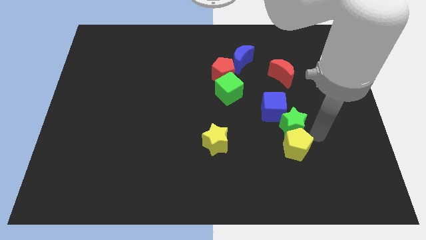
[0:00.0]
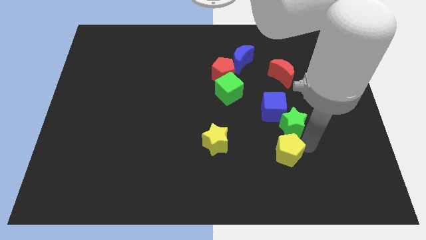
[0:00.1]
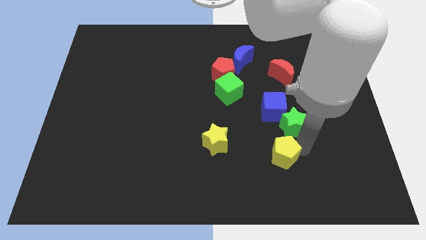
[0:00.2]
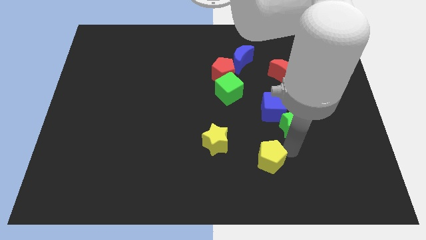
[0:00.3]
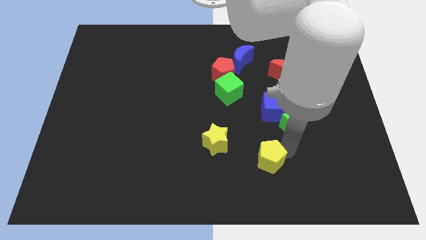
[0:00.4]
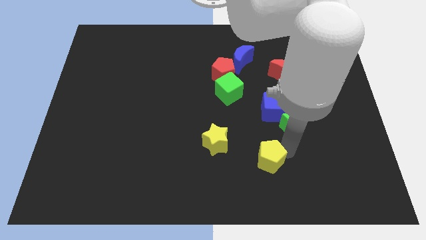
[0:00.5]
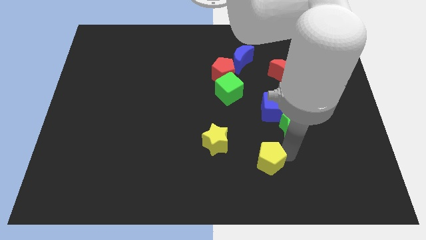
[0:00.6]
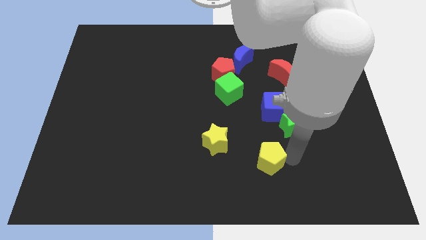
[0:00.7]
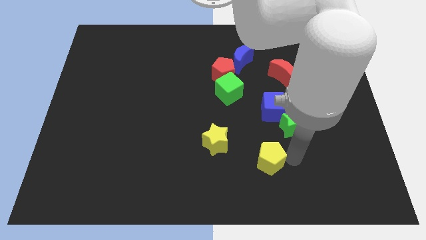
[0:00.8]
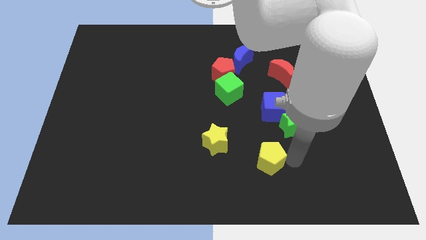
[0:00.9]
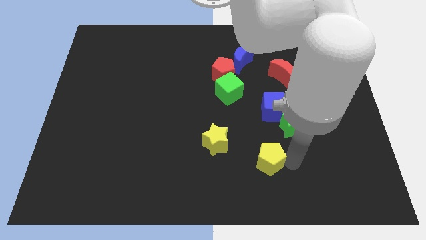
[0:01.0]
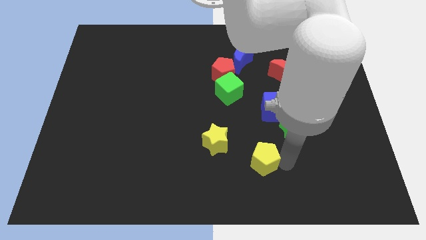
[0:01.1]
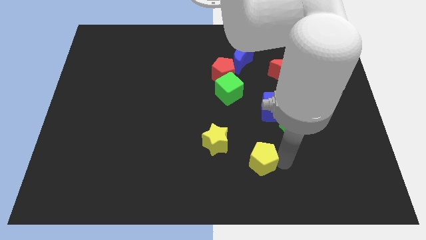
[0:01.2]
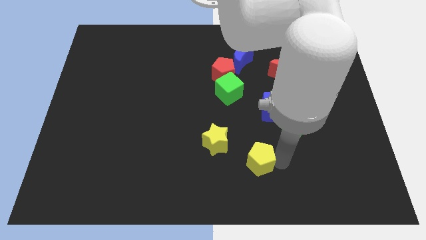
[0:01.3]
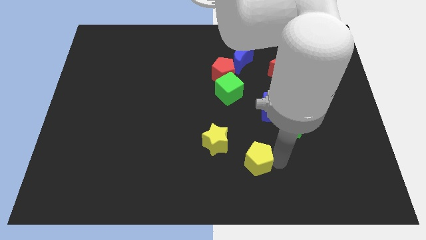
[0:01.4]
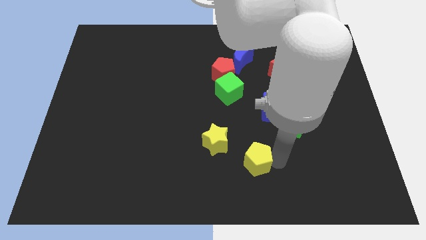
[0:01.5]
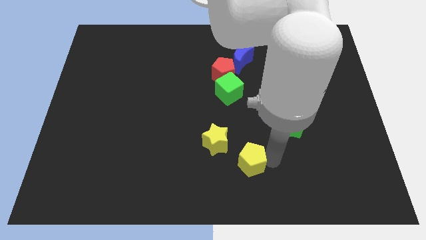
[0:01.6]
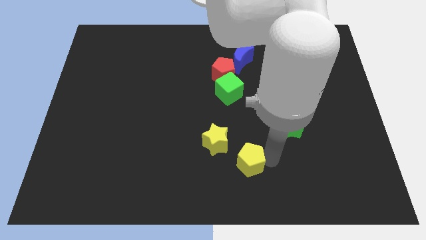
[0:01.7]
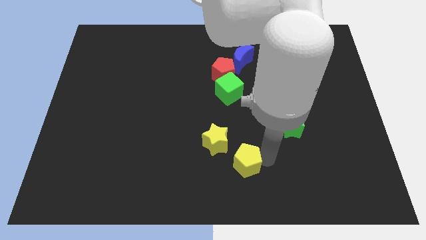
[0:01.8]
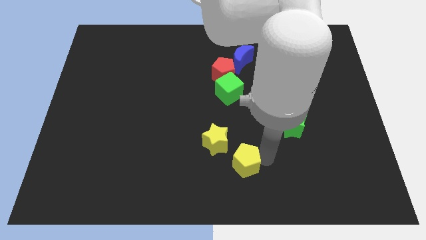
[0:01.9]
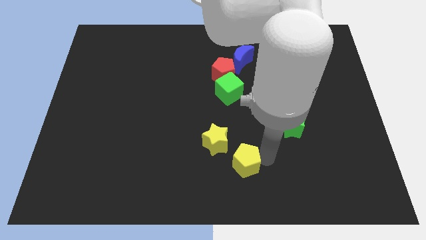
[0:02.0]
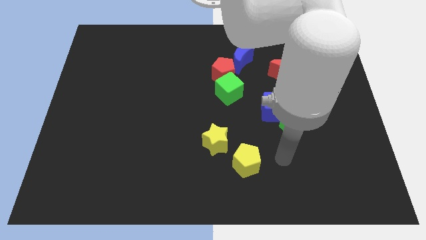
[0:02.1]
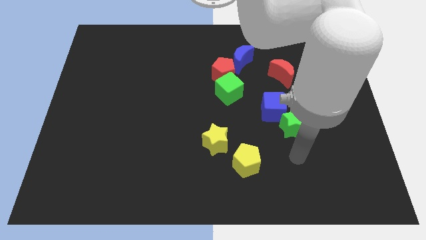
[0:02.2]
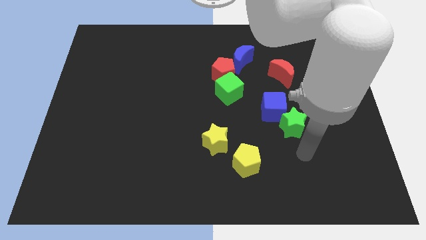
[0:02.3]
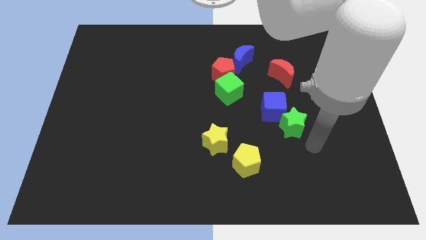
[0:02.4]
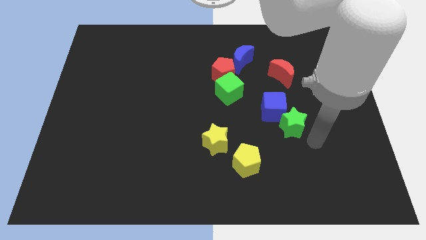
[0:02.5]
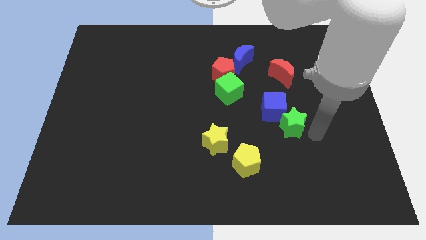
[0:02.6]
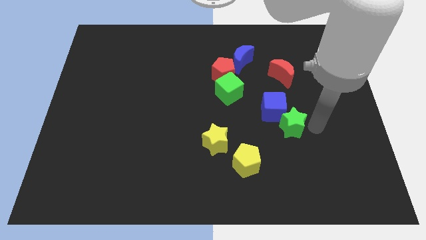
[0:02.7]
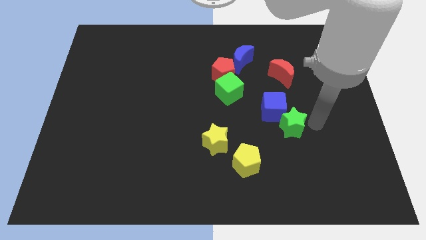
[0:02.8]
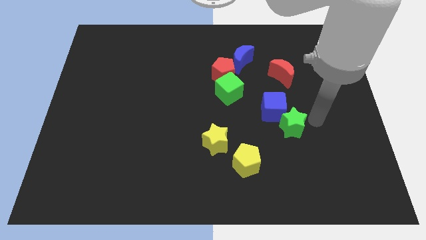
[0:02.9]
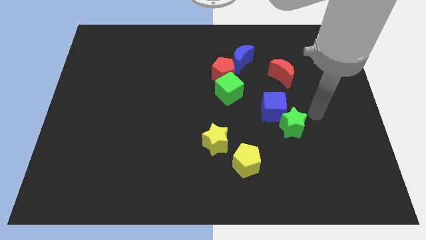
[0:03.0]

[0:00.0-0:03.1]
push the yellow pentagon to the left

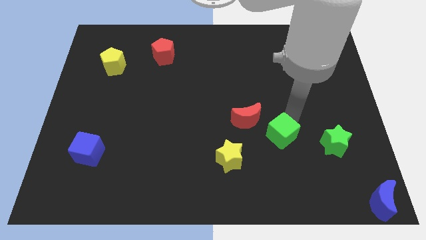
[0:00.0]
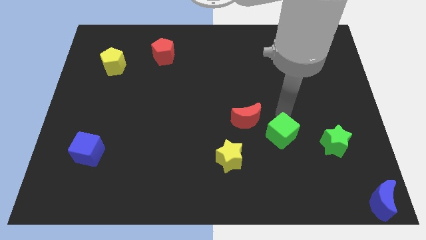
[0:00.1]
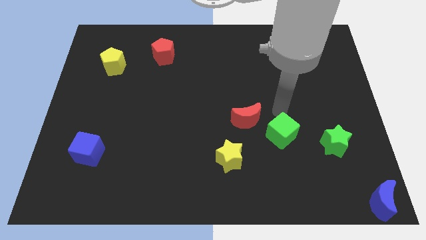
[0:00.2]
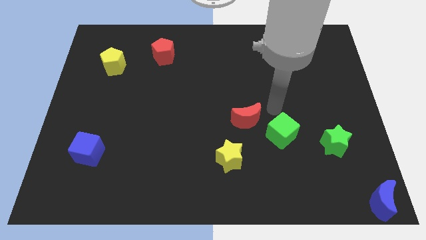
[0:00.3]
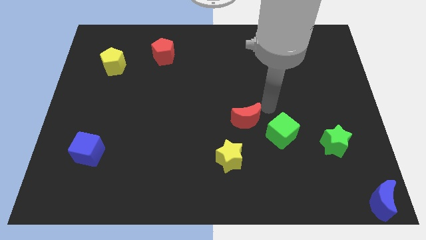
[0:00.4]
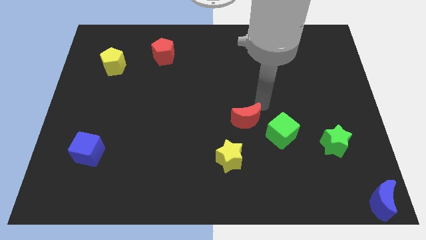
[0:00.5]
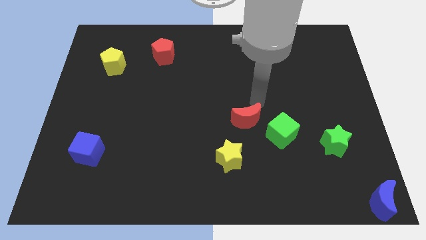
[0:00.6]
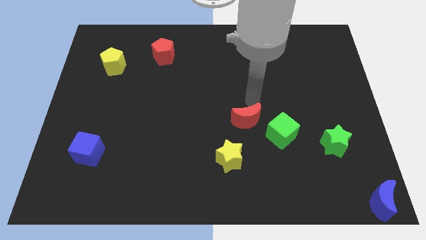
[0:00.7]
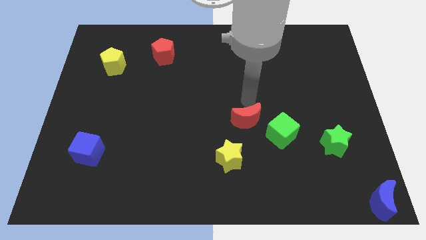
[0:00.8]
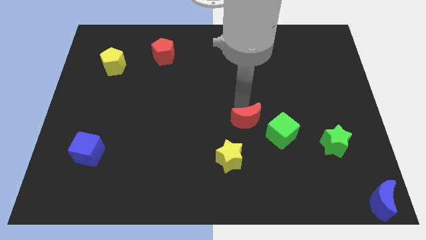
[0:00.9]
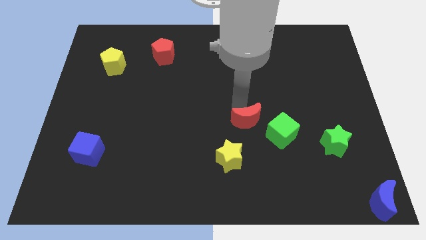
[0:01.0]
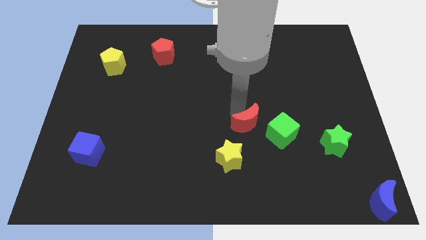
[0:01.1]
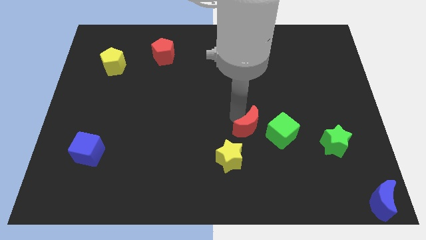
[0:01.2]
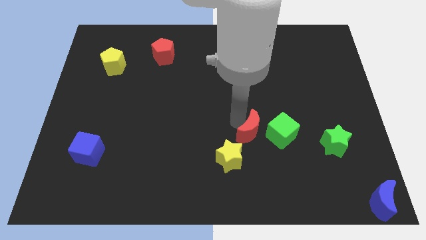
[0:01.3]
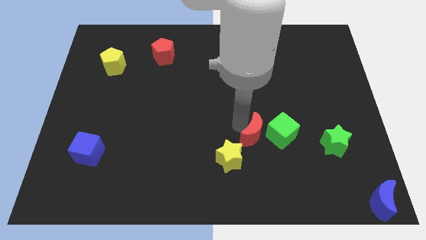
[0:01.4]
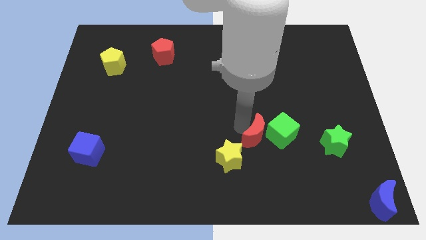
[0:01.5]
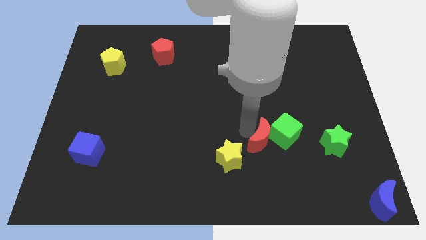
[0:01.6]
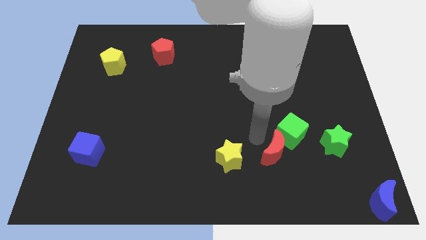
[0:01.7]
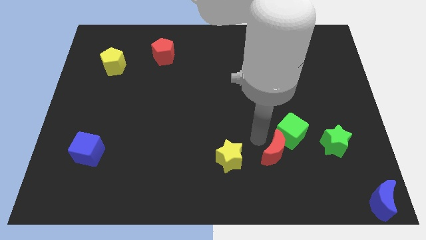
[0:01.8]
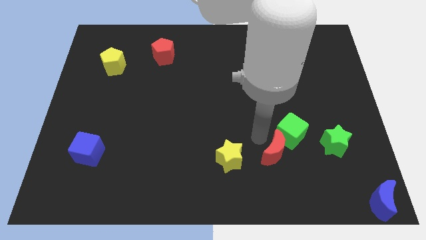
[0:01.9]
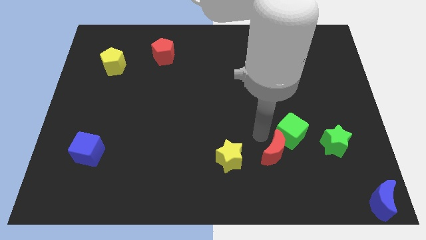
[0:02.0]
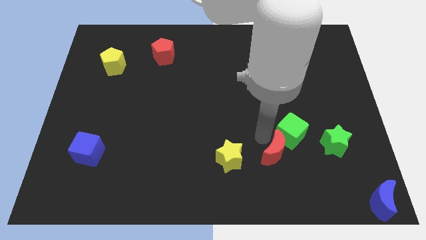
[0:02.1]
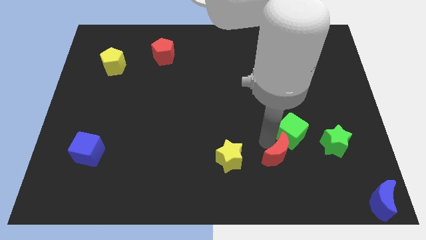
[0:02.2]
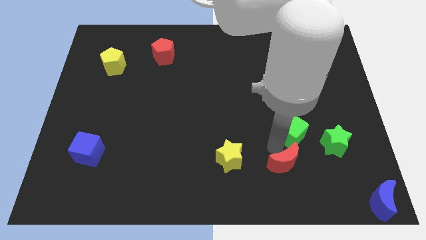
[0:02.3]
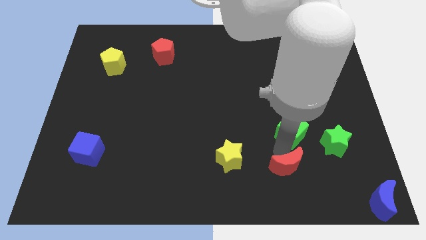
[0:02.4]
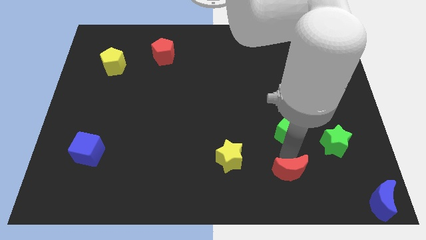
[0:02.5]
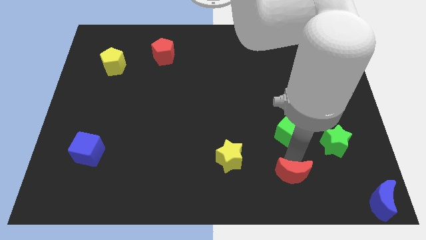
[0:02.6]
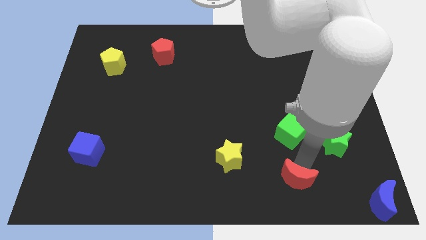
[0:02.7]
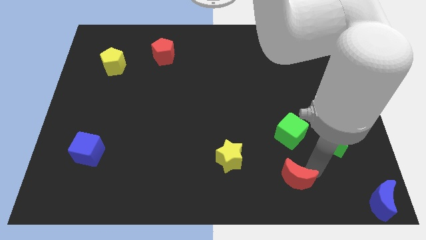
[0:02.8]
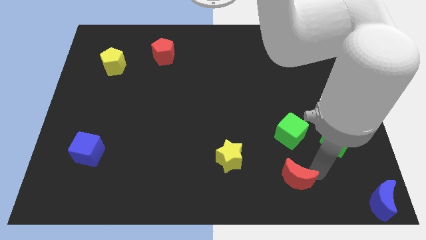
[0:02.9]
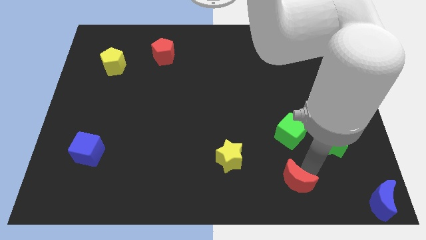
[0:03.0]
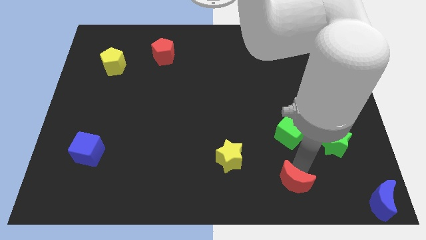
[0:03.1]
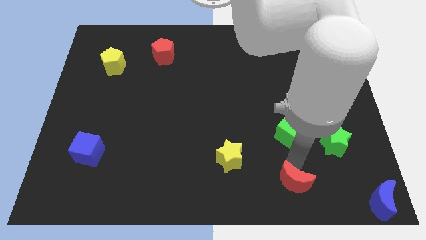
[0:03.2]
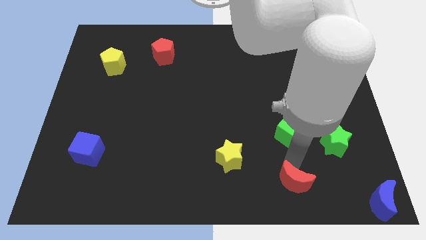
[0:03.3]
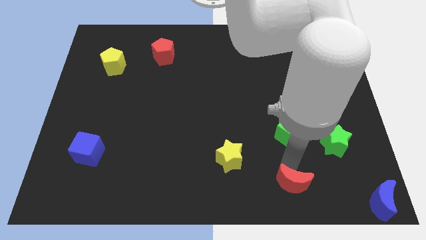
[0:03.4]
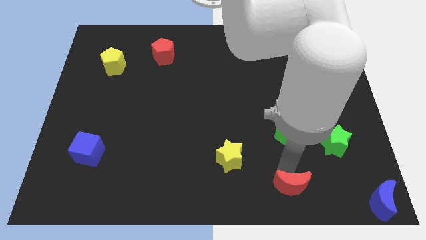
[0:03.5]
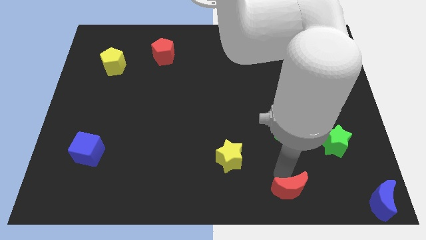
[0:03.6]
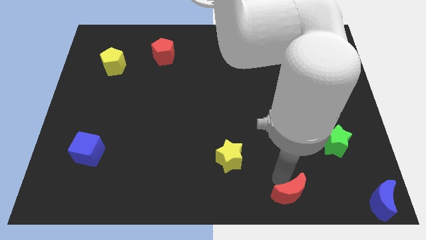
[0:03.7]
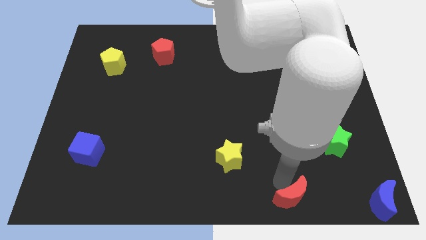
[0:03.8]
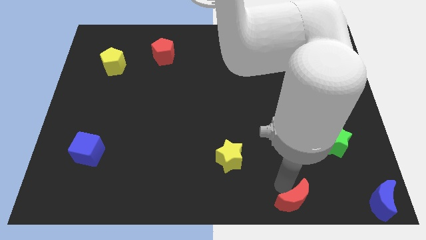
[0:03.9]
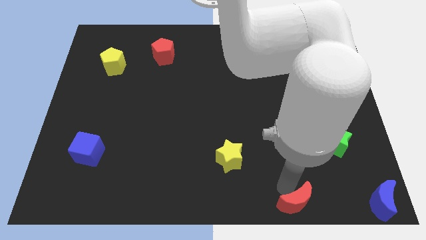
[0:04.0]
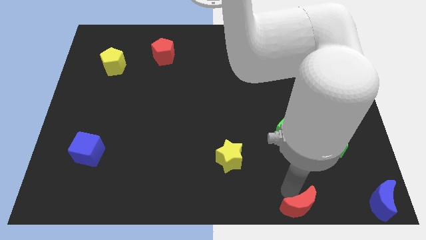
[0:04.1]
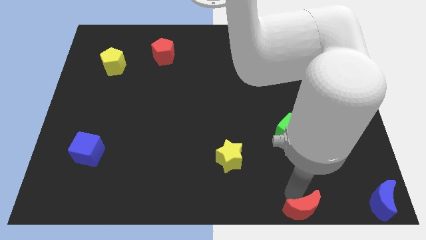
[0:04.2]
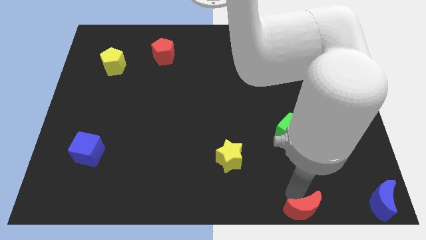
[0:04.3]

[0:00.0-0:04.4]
place the red moon below the green cube

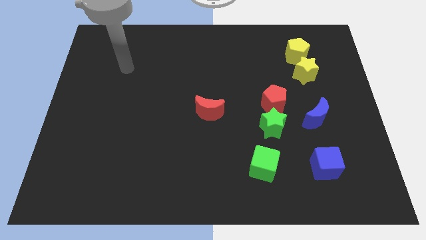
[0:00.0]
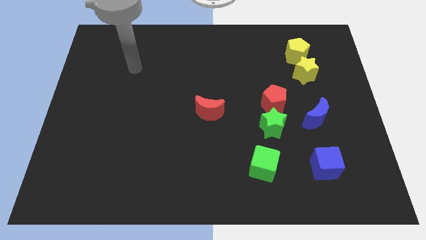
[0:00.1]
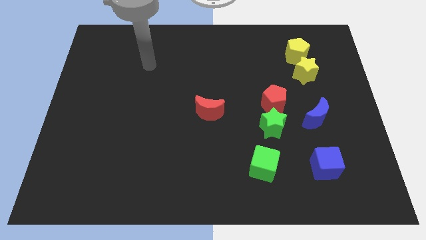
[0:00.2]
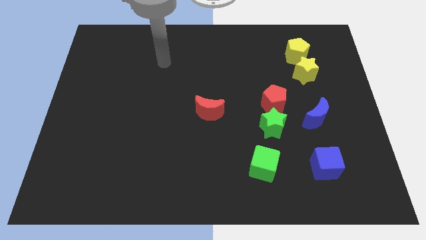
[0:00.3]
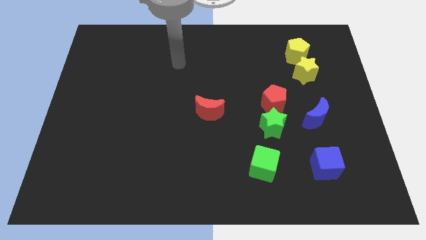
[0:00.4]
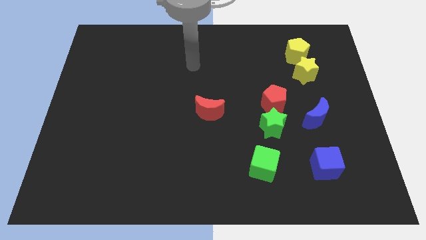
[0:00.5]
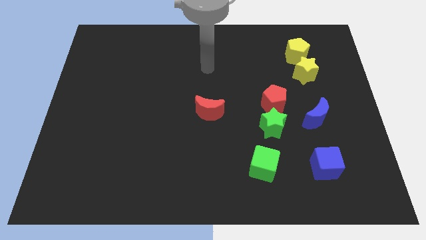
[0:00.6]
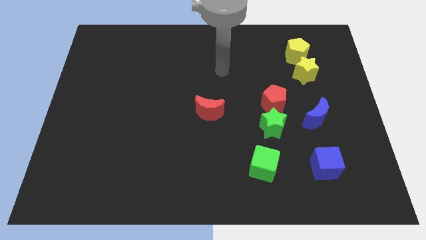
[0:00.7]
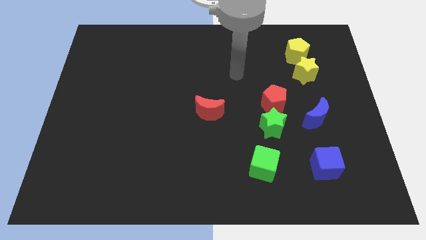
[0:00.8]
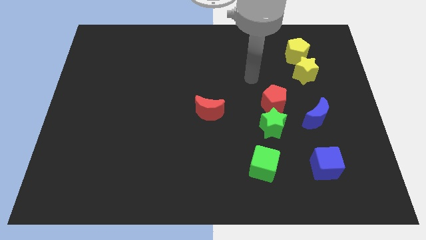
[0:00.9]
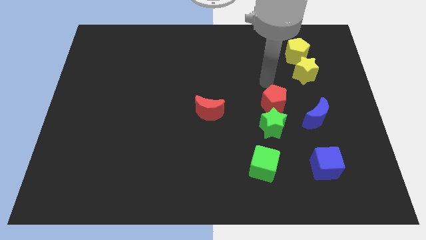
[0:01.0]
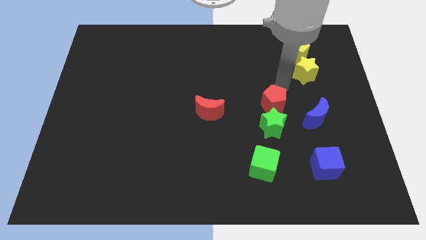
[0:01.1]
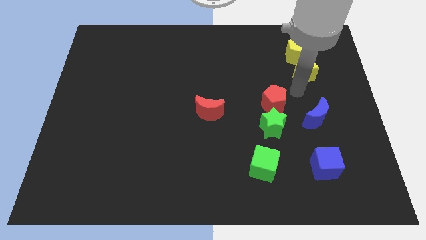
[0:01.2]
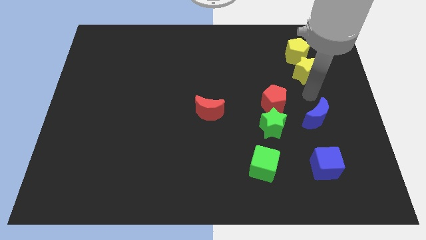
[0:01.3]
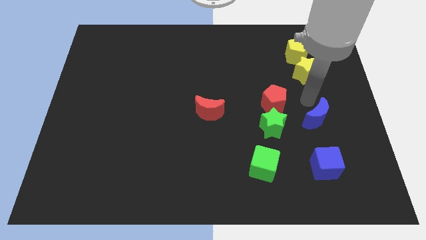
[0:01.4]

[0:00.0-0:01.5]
move your arm towards the bottom of the board

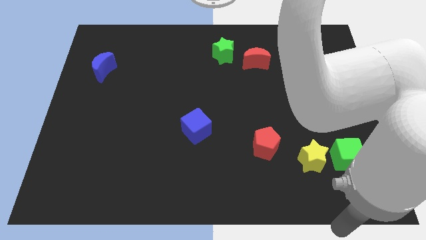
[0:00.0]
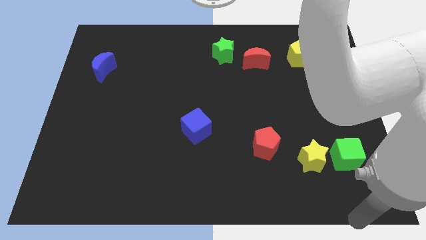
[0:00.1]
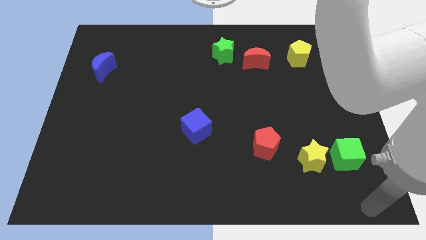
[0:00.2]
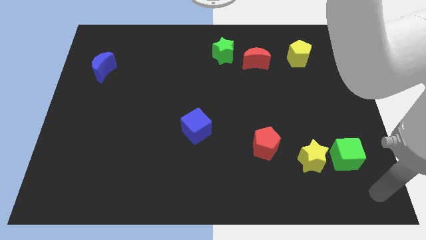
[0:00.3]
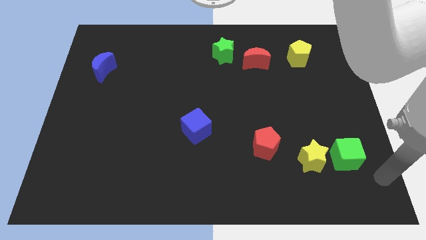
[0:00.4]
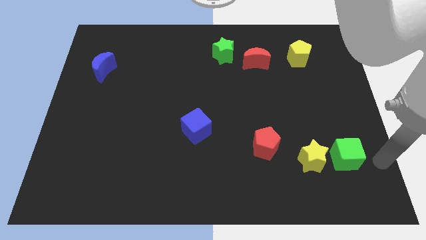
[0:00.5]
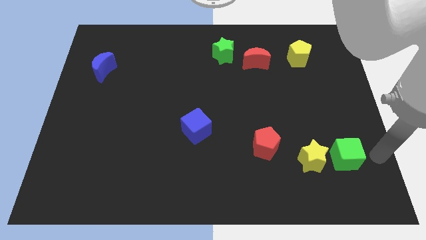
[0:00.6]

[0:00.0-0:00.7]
put your arm to the right side of green cube
